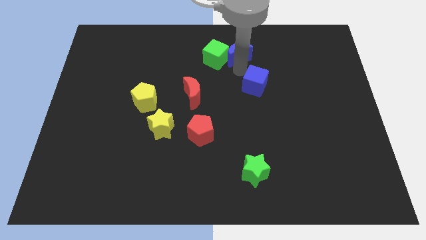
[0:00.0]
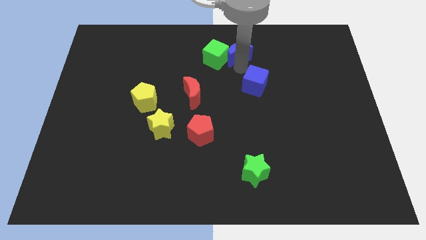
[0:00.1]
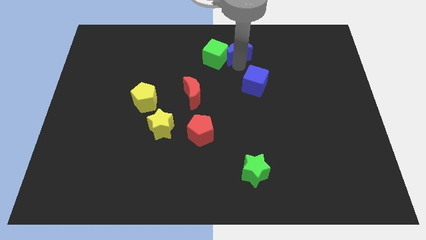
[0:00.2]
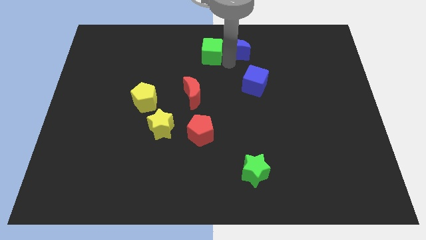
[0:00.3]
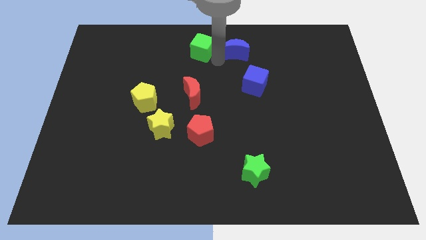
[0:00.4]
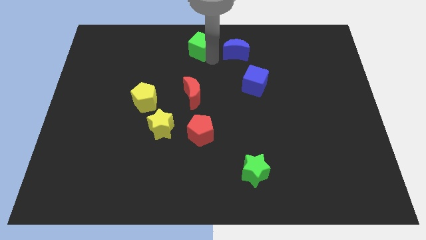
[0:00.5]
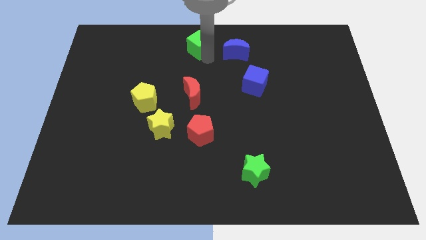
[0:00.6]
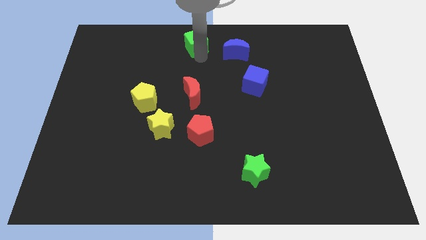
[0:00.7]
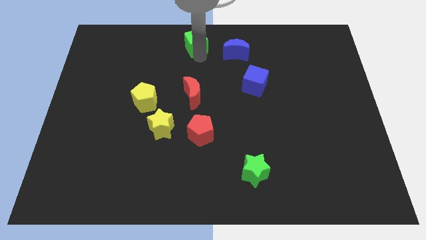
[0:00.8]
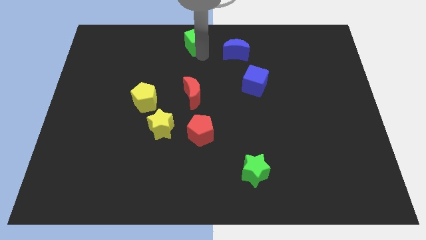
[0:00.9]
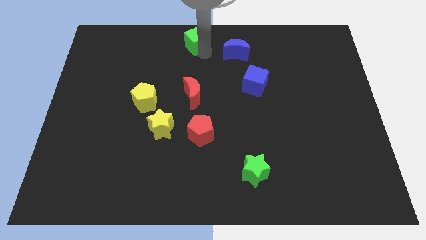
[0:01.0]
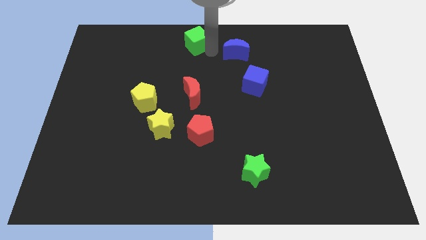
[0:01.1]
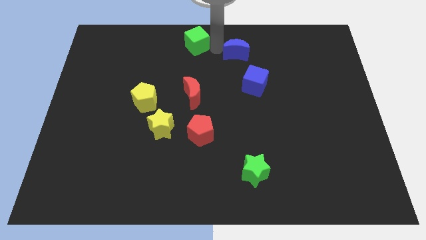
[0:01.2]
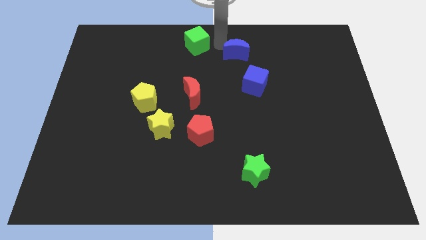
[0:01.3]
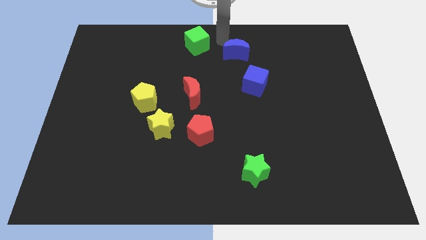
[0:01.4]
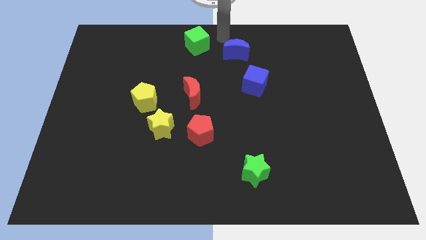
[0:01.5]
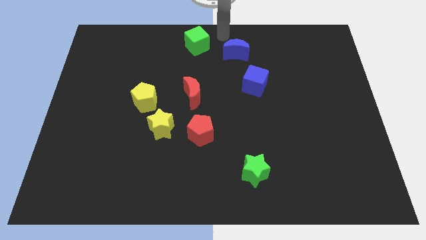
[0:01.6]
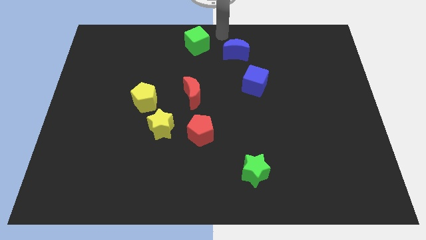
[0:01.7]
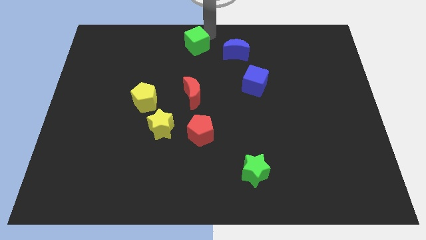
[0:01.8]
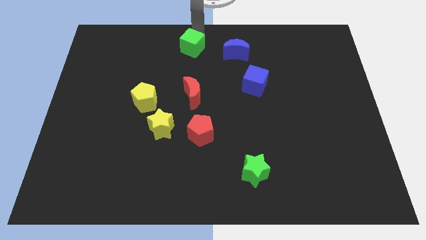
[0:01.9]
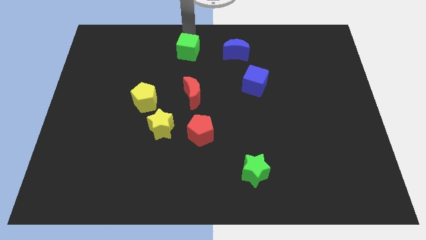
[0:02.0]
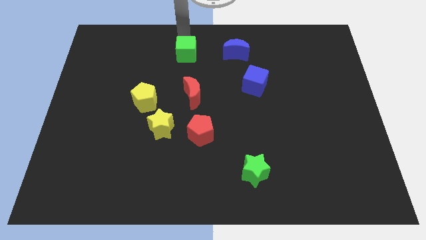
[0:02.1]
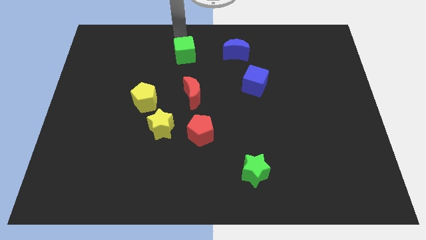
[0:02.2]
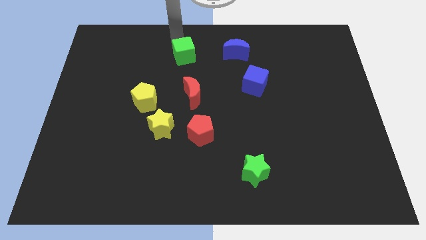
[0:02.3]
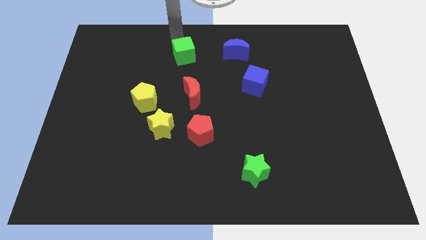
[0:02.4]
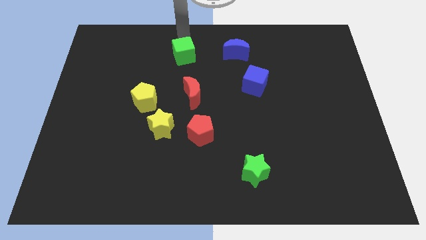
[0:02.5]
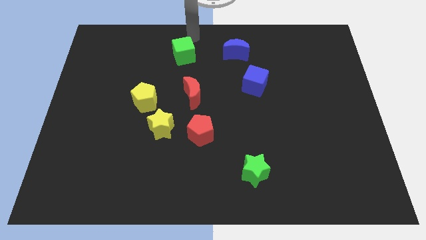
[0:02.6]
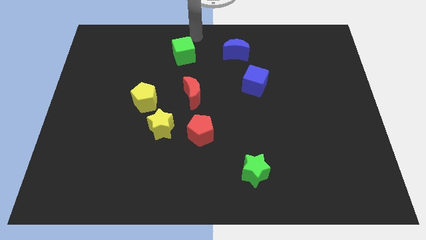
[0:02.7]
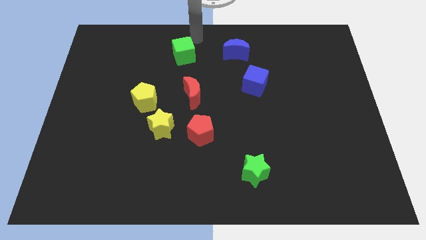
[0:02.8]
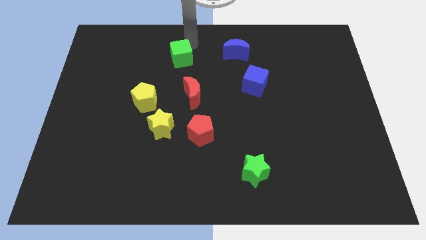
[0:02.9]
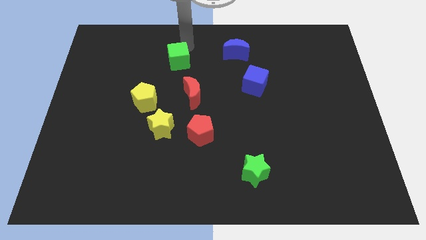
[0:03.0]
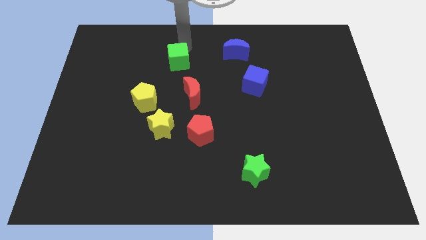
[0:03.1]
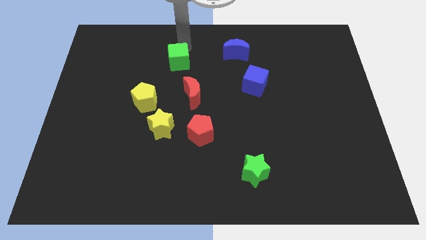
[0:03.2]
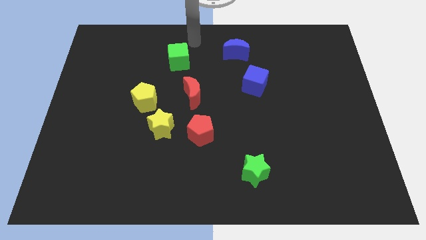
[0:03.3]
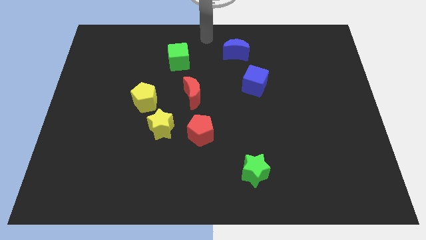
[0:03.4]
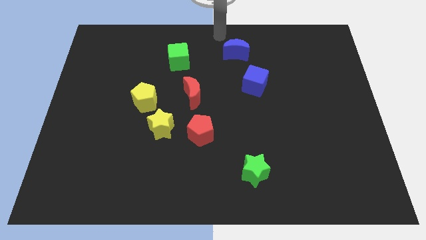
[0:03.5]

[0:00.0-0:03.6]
place the green cube at the top side of the red moon

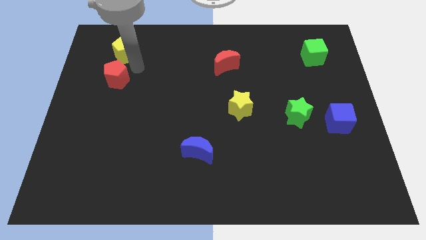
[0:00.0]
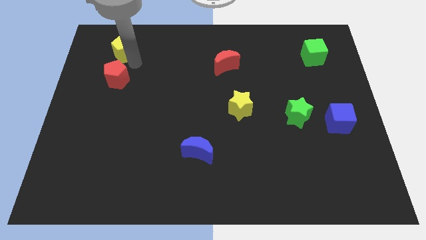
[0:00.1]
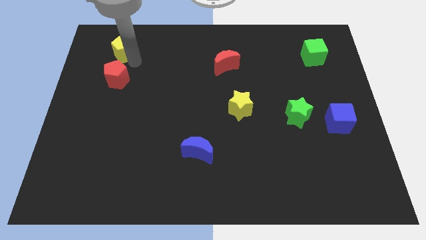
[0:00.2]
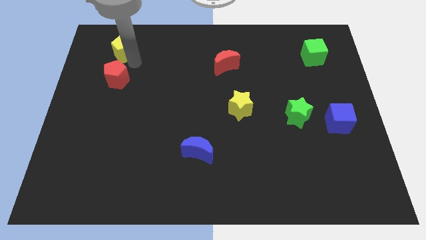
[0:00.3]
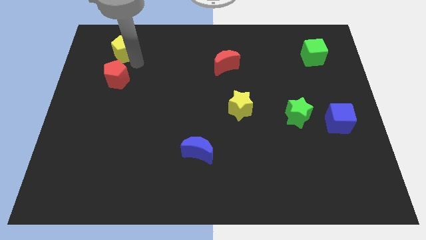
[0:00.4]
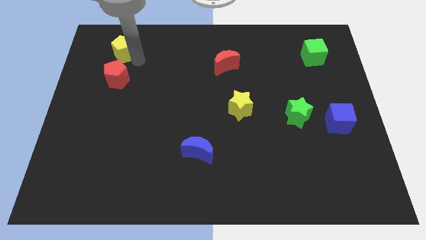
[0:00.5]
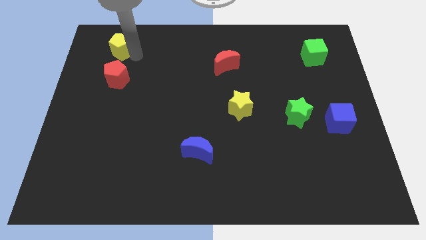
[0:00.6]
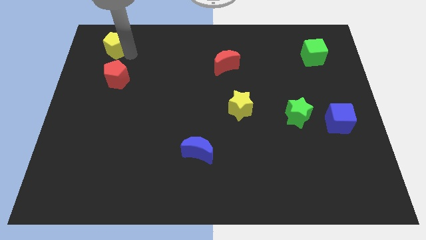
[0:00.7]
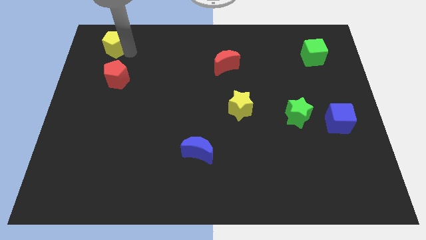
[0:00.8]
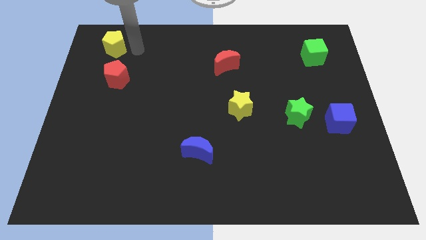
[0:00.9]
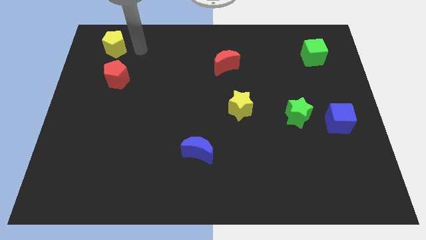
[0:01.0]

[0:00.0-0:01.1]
separate the yellow pentagon from the red pentagon

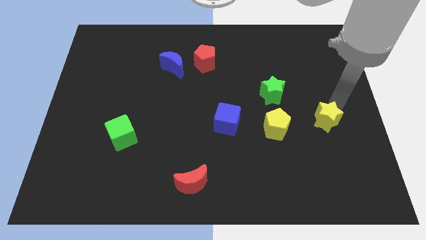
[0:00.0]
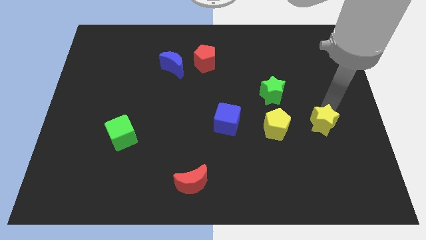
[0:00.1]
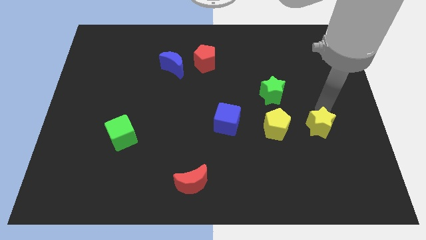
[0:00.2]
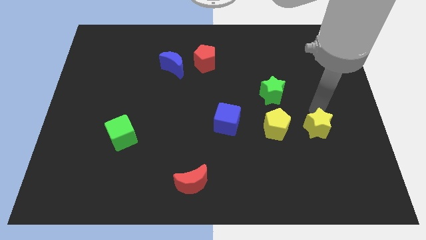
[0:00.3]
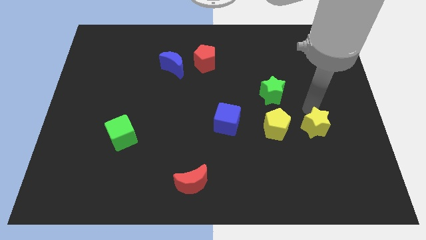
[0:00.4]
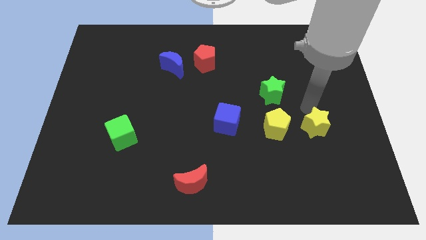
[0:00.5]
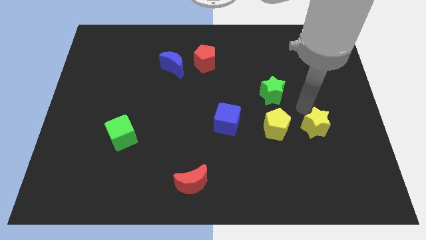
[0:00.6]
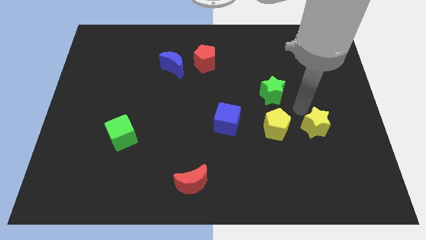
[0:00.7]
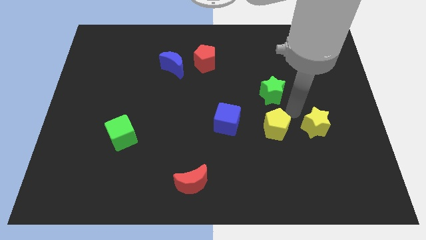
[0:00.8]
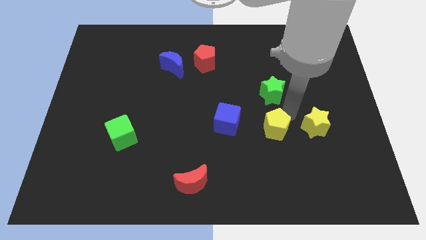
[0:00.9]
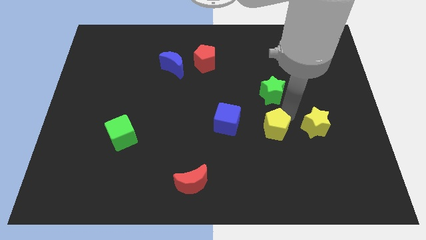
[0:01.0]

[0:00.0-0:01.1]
put the yellow star parallel to yellow pentagon

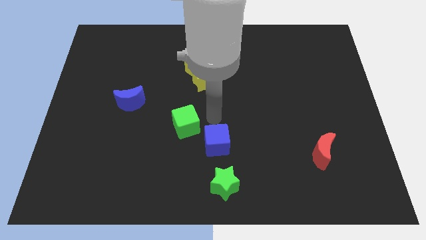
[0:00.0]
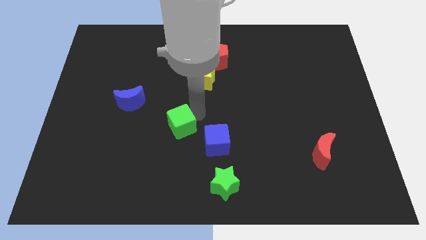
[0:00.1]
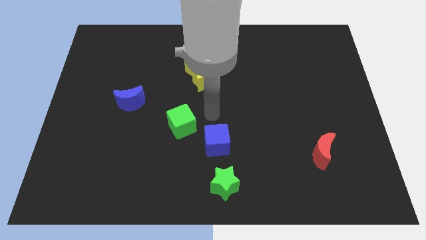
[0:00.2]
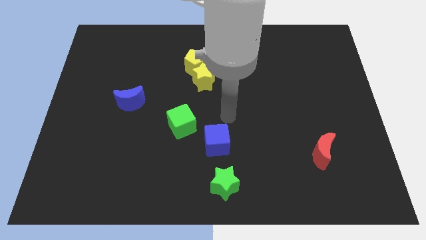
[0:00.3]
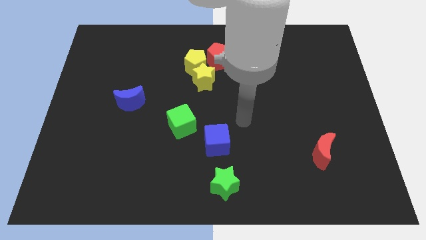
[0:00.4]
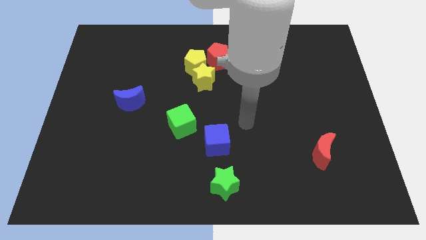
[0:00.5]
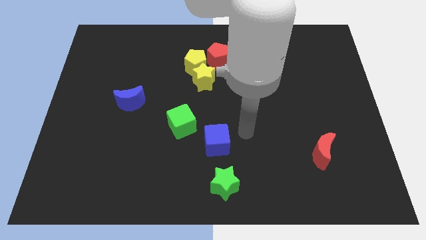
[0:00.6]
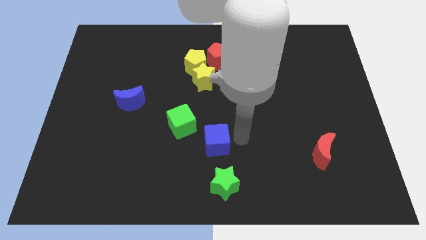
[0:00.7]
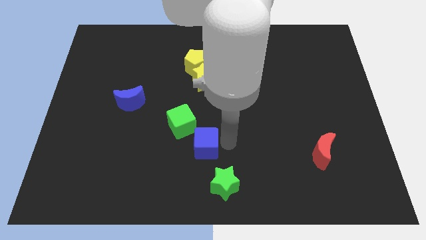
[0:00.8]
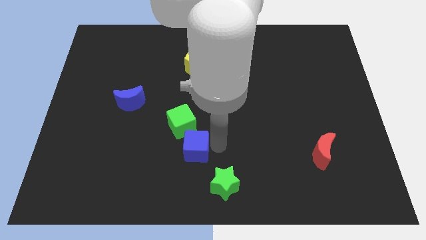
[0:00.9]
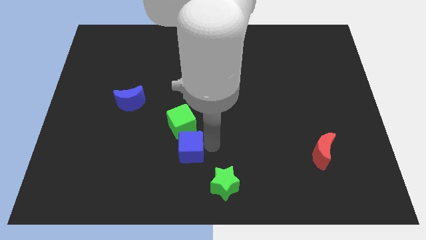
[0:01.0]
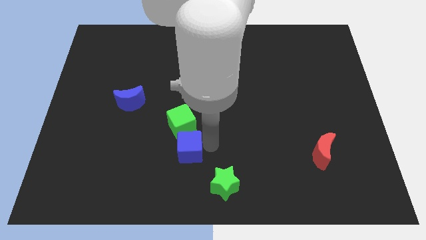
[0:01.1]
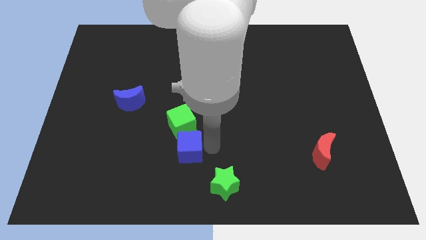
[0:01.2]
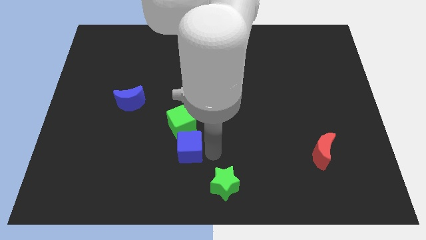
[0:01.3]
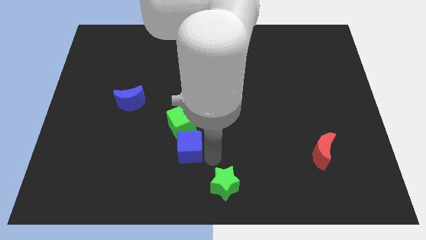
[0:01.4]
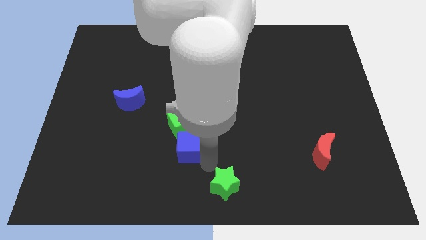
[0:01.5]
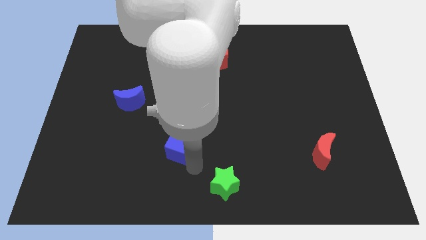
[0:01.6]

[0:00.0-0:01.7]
push the blue cube to the bottom of the green cube

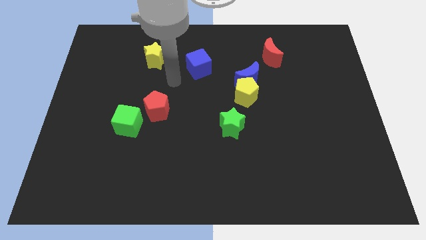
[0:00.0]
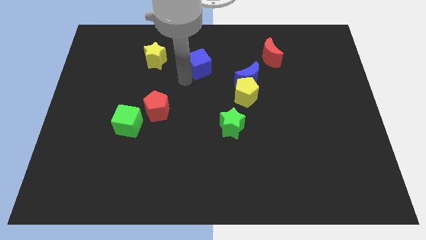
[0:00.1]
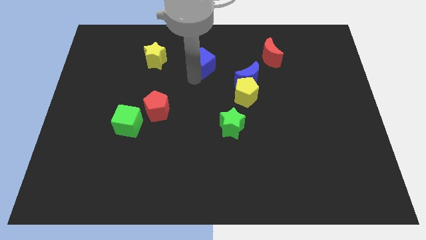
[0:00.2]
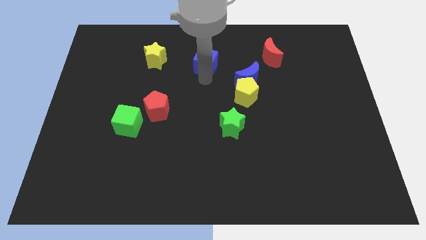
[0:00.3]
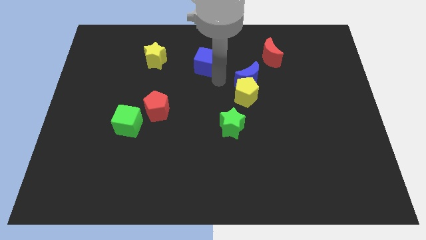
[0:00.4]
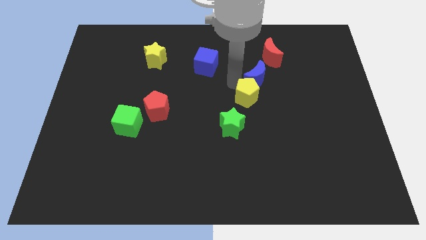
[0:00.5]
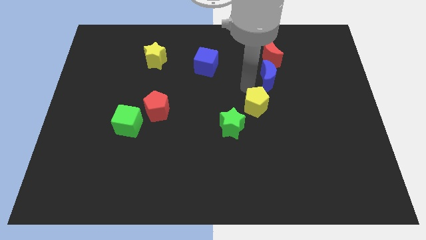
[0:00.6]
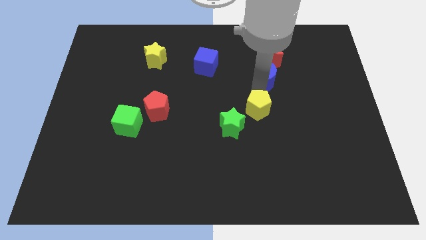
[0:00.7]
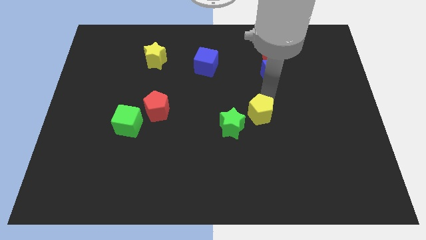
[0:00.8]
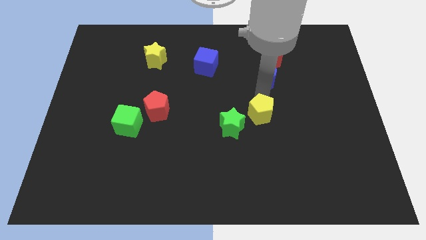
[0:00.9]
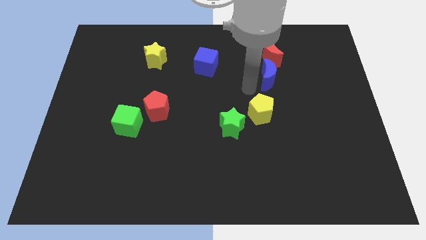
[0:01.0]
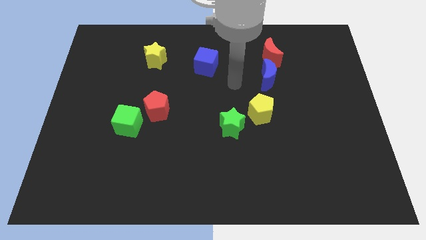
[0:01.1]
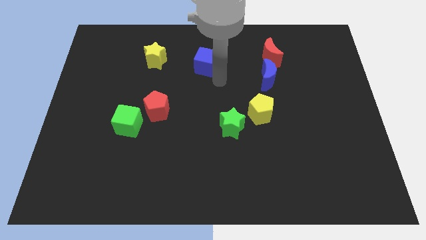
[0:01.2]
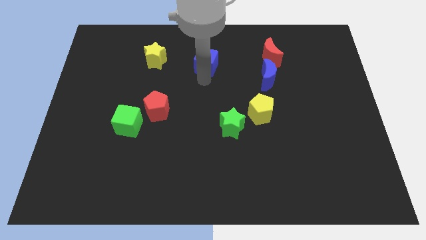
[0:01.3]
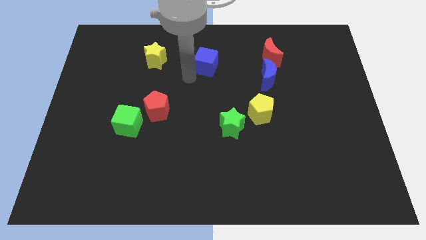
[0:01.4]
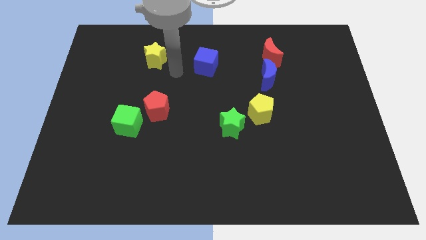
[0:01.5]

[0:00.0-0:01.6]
slightly push the blue cube and separate blue moon and yellow pentagon
